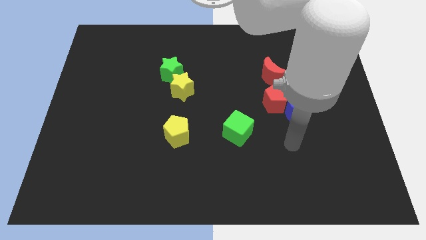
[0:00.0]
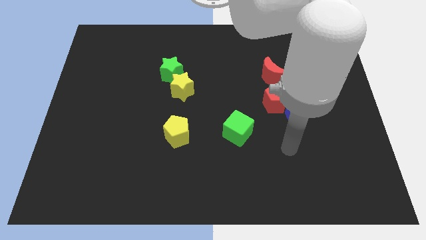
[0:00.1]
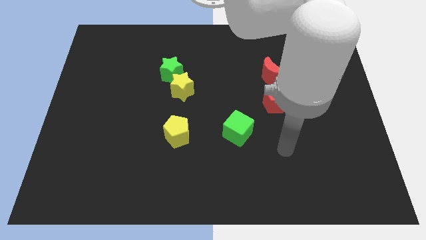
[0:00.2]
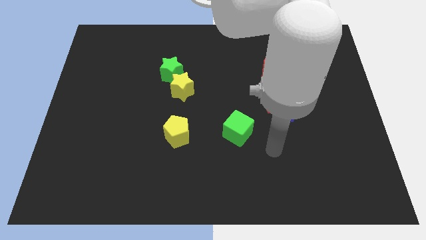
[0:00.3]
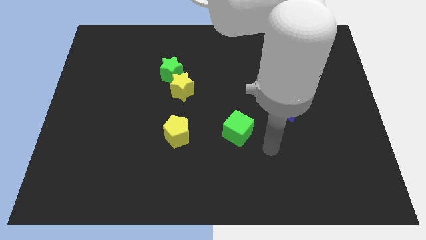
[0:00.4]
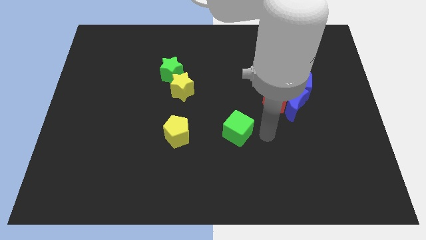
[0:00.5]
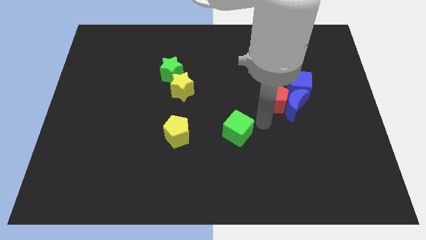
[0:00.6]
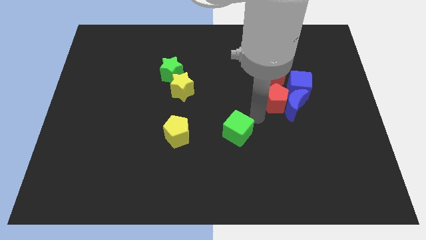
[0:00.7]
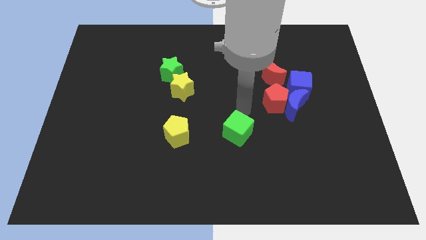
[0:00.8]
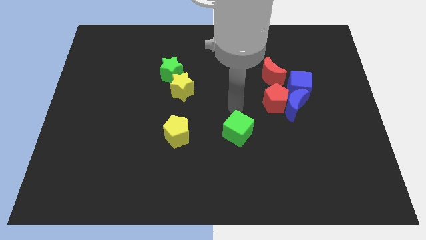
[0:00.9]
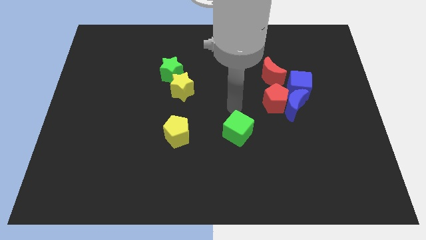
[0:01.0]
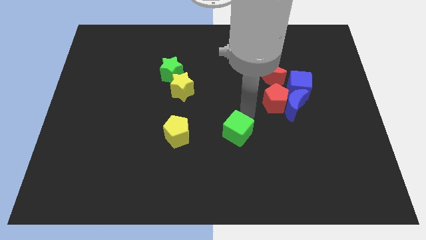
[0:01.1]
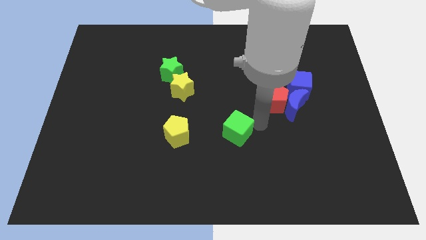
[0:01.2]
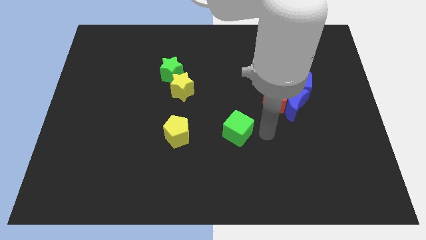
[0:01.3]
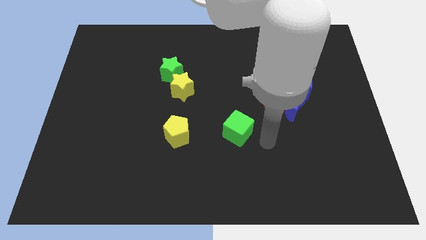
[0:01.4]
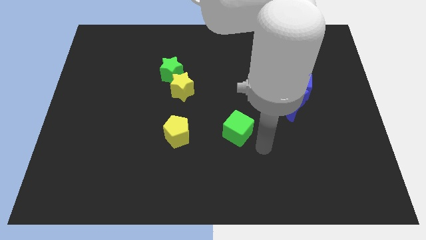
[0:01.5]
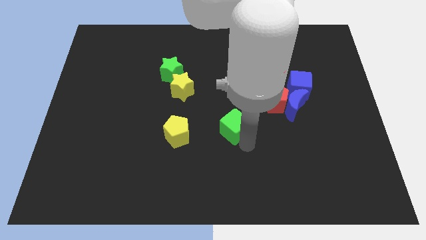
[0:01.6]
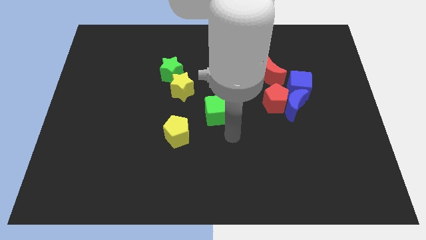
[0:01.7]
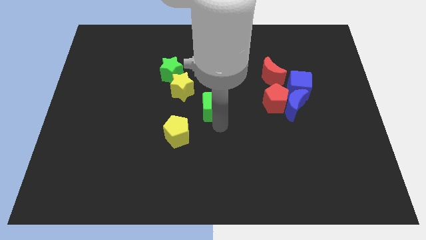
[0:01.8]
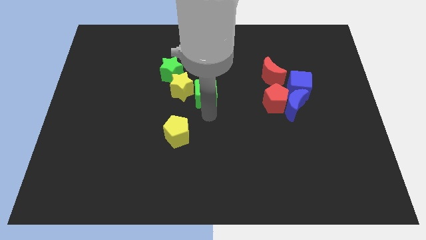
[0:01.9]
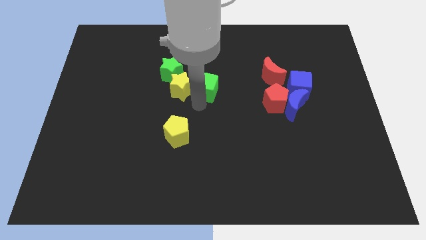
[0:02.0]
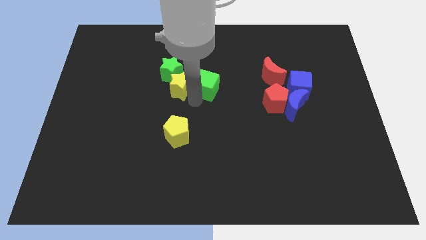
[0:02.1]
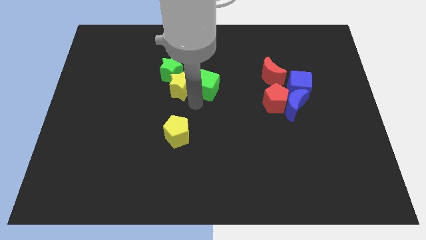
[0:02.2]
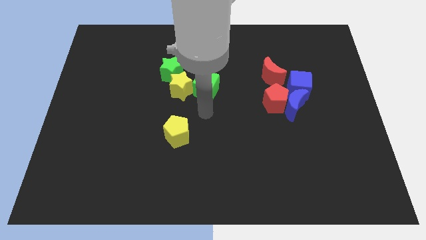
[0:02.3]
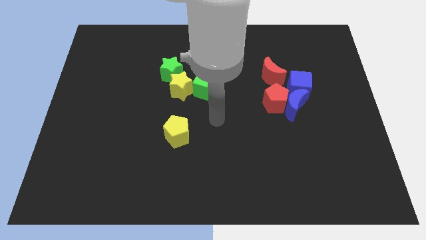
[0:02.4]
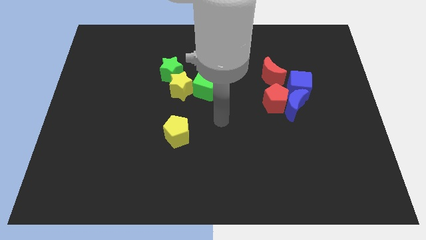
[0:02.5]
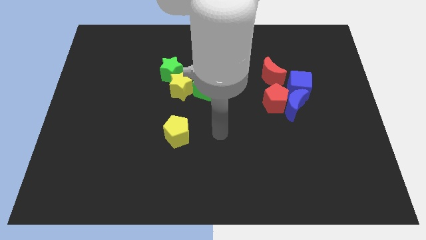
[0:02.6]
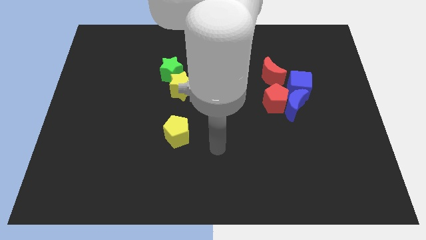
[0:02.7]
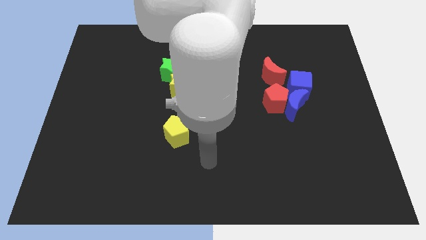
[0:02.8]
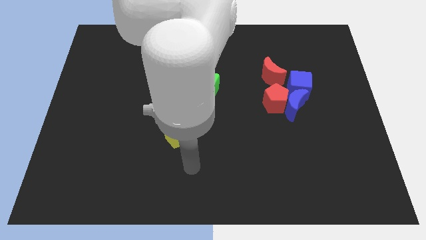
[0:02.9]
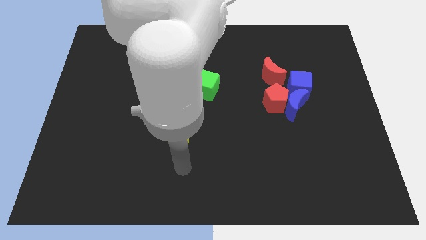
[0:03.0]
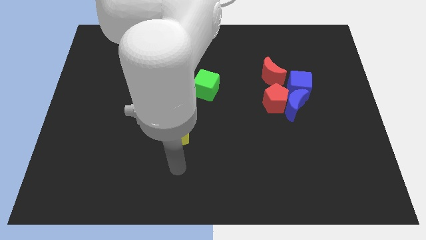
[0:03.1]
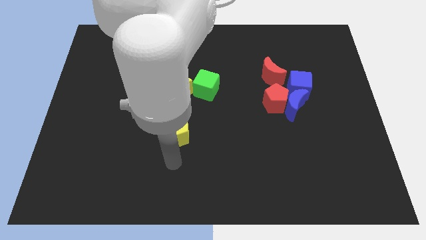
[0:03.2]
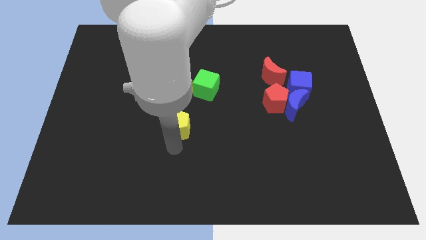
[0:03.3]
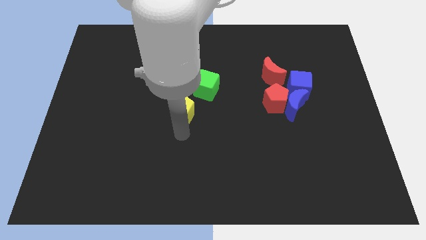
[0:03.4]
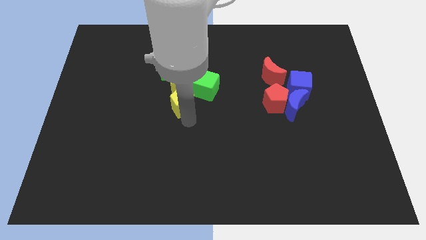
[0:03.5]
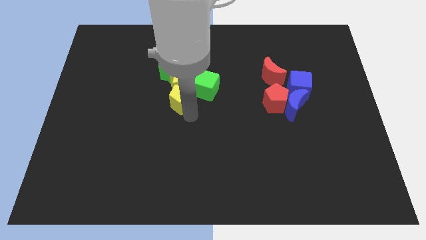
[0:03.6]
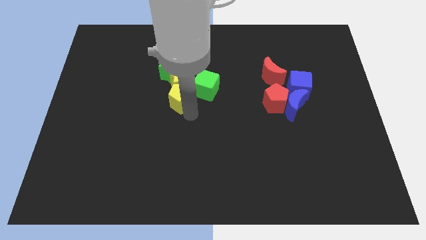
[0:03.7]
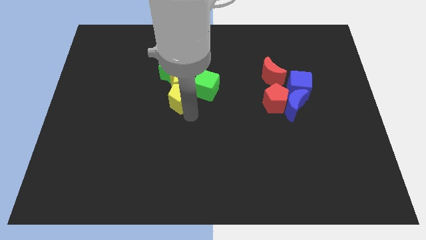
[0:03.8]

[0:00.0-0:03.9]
join the green and yellow blocks at the center of the board

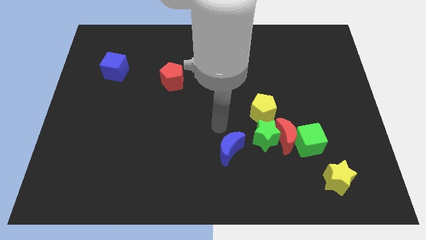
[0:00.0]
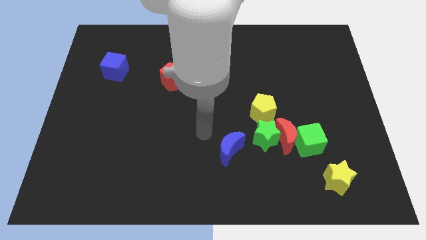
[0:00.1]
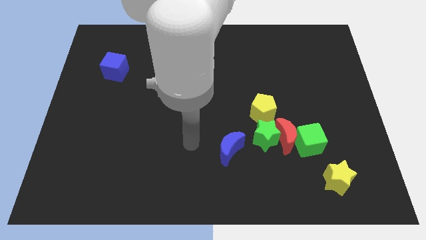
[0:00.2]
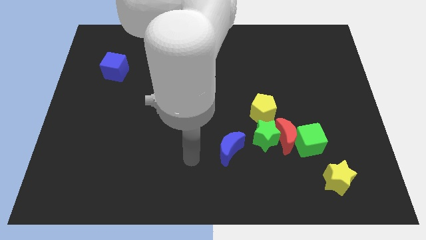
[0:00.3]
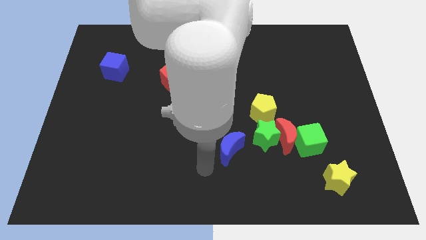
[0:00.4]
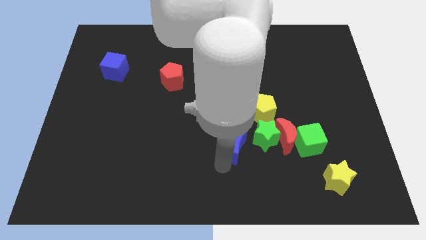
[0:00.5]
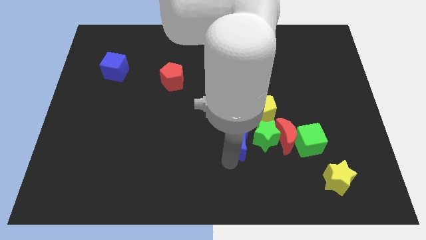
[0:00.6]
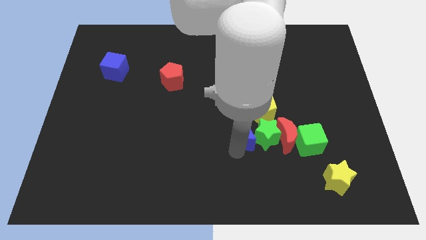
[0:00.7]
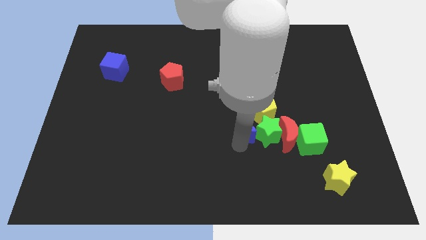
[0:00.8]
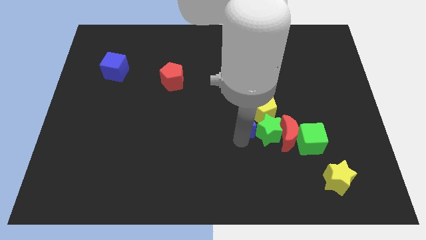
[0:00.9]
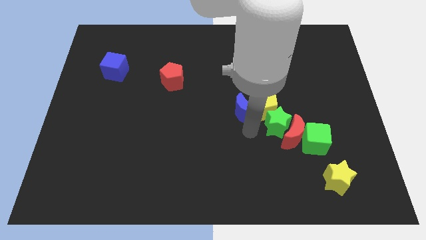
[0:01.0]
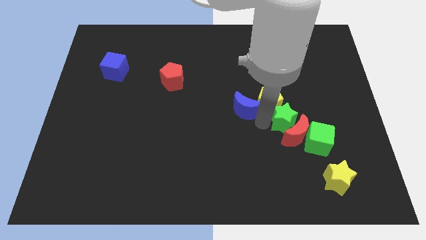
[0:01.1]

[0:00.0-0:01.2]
push the blue crescent into the green and yellow pentagon

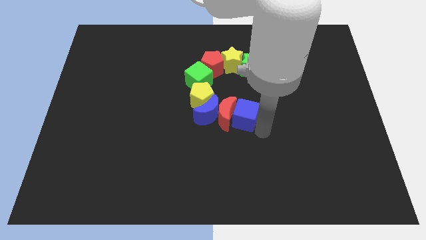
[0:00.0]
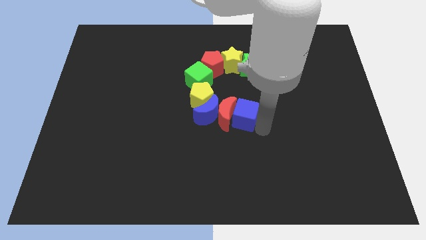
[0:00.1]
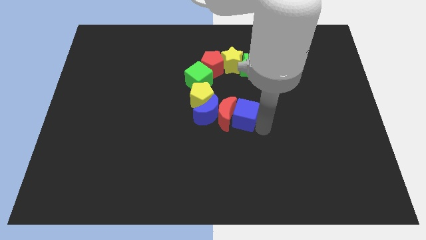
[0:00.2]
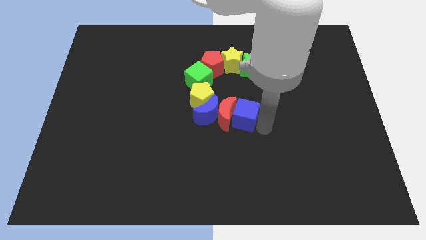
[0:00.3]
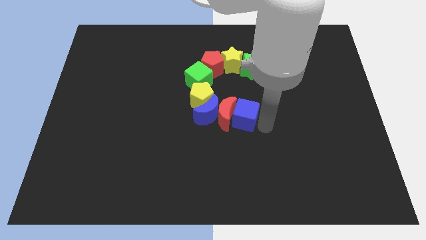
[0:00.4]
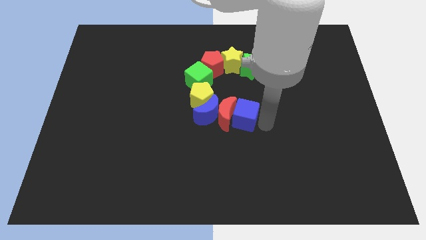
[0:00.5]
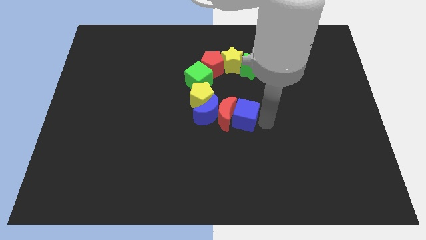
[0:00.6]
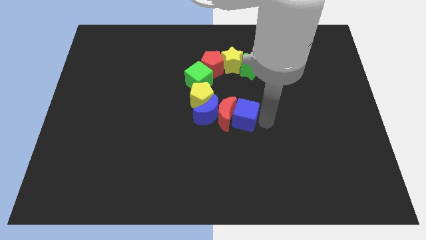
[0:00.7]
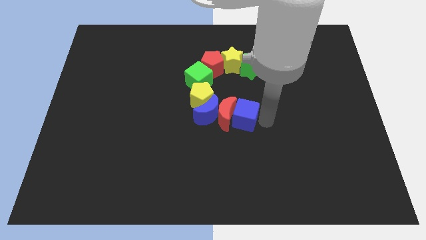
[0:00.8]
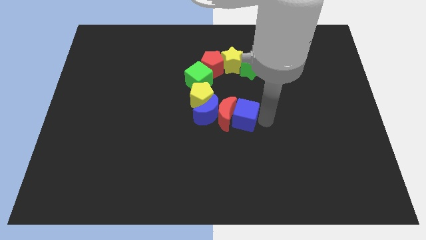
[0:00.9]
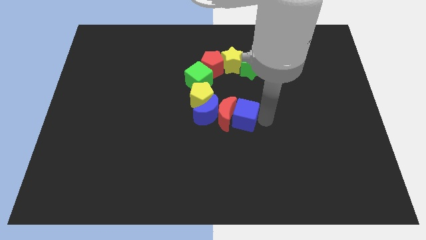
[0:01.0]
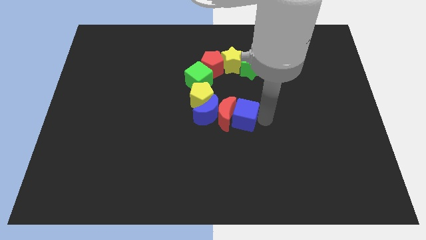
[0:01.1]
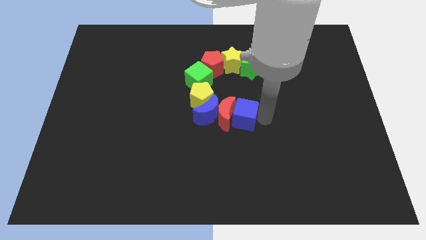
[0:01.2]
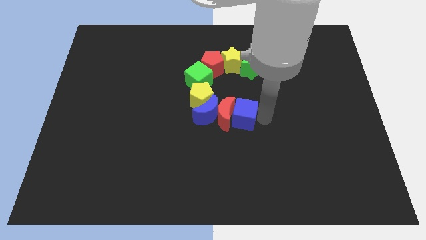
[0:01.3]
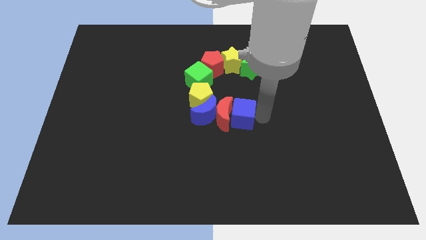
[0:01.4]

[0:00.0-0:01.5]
move the blue cube to the right side of the red crescent

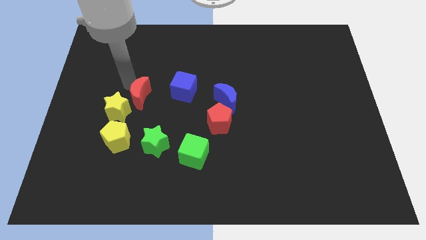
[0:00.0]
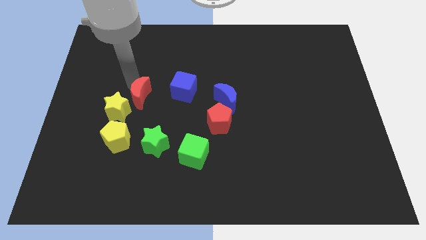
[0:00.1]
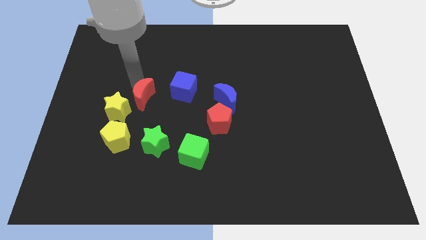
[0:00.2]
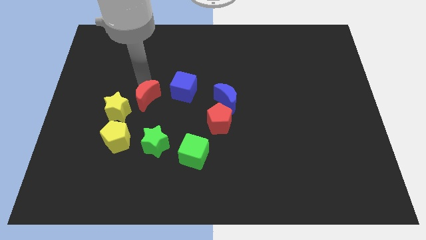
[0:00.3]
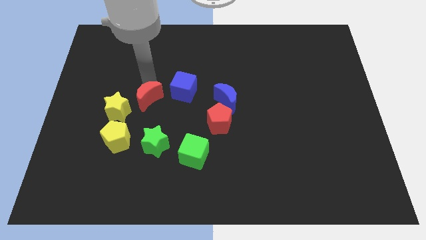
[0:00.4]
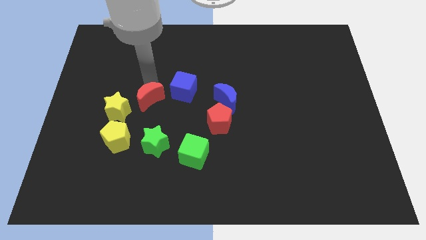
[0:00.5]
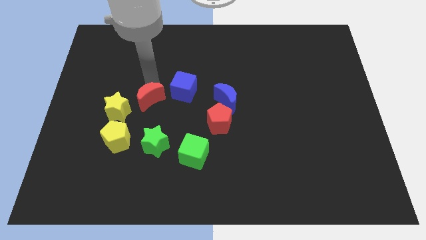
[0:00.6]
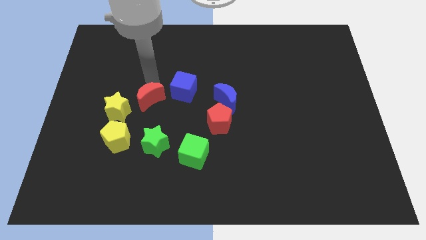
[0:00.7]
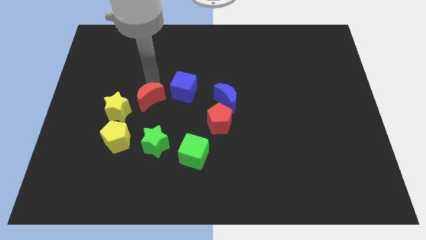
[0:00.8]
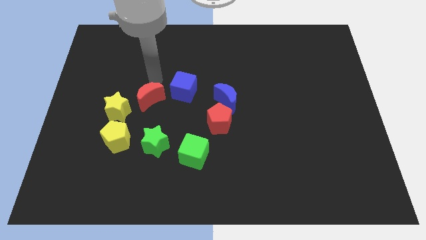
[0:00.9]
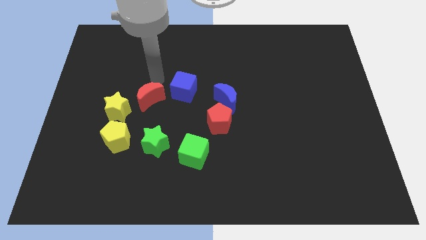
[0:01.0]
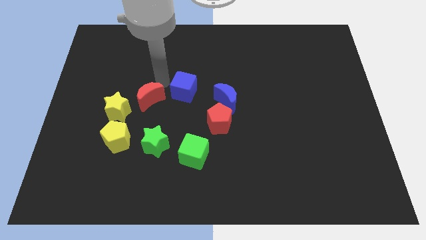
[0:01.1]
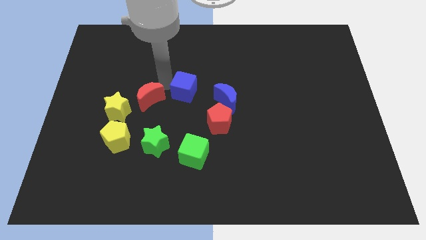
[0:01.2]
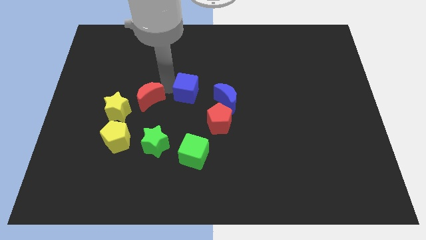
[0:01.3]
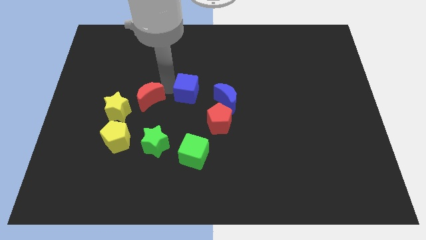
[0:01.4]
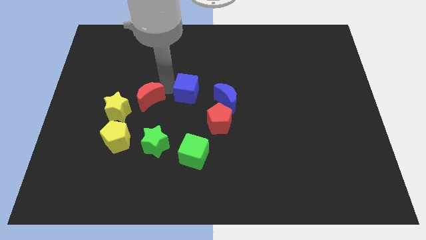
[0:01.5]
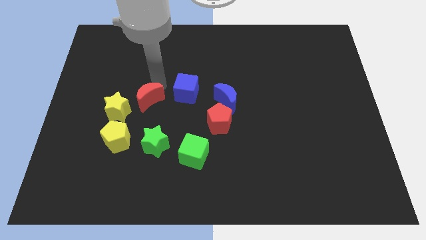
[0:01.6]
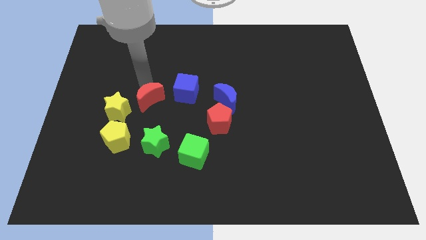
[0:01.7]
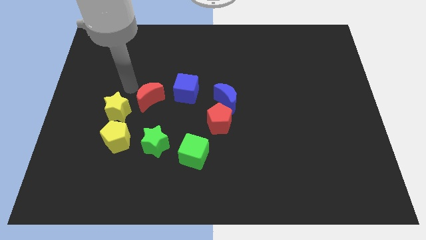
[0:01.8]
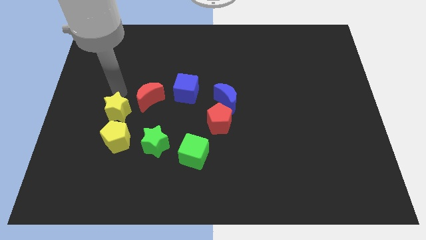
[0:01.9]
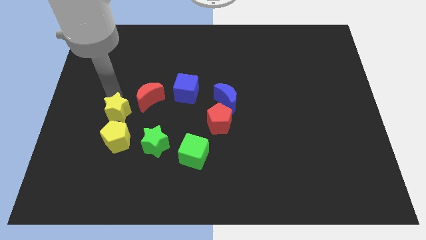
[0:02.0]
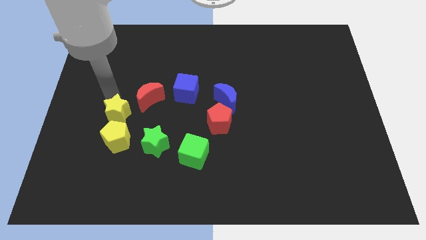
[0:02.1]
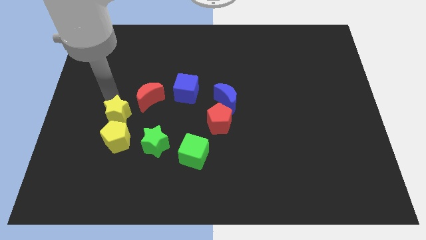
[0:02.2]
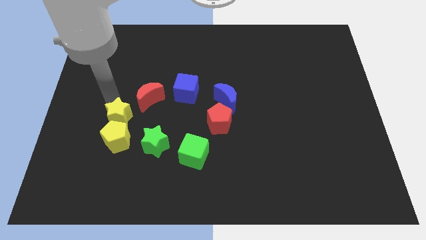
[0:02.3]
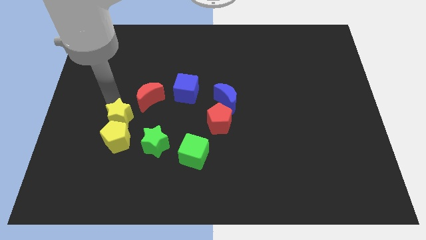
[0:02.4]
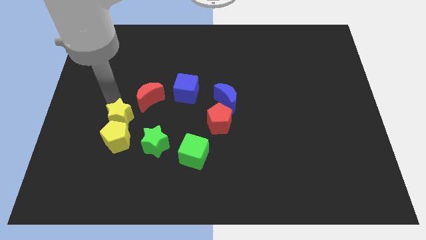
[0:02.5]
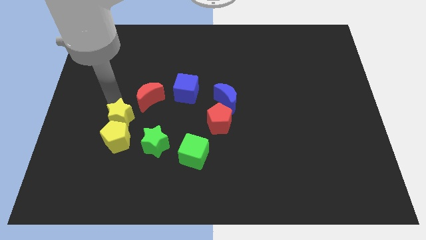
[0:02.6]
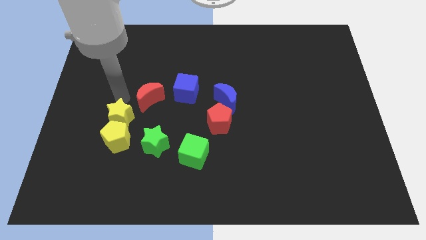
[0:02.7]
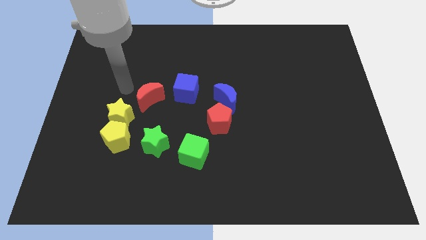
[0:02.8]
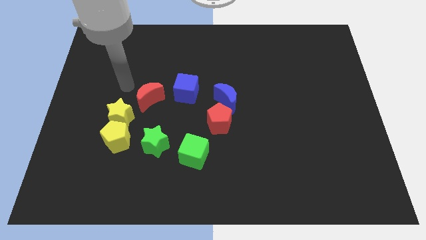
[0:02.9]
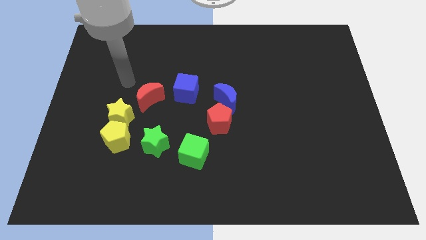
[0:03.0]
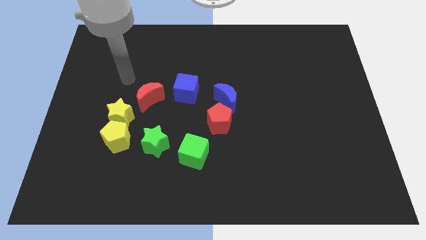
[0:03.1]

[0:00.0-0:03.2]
move the yellow star close to the yellow pentagon
